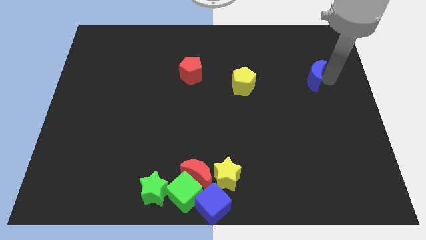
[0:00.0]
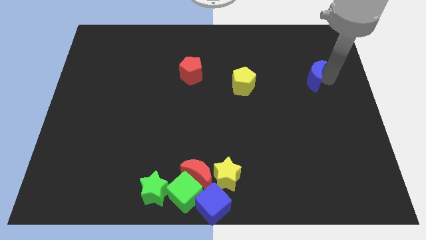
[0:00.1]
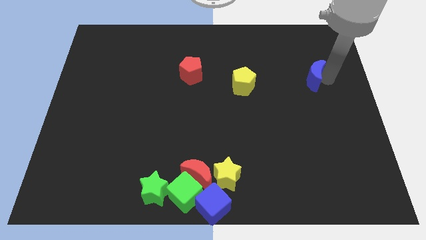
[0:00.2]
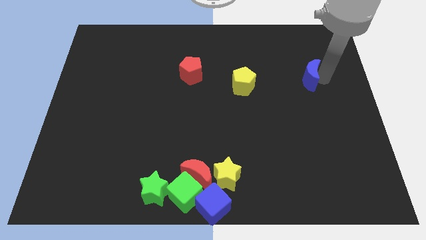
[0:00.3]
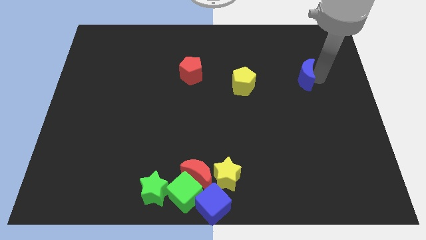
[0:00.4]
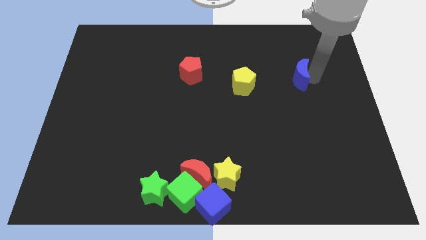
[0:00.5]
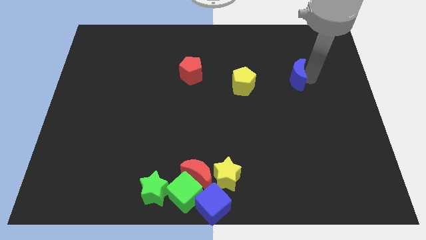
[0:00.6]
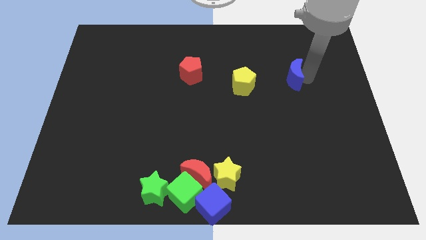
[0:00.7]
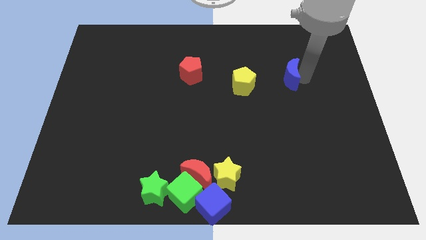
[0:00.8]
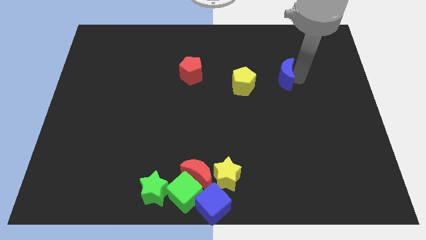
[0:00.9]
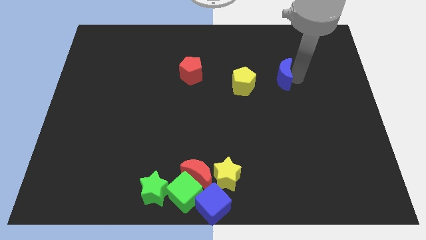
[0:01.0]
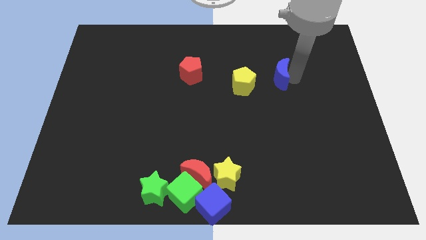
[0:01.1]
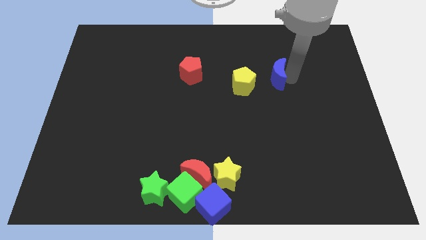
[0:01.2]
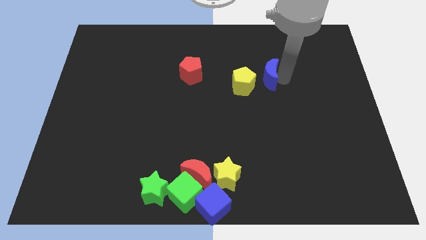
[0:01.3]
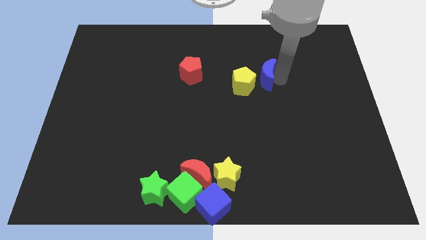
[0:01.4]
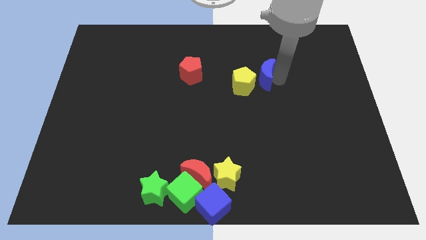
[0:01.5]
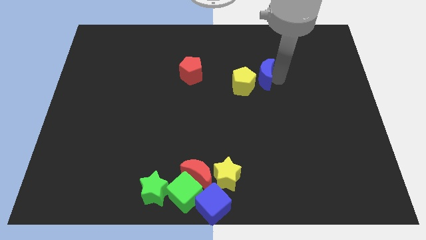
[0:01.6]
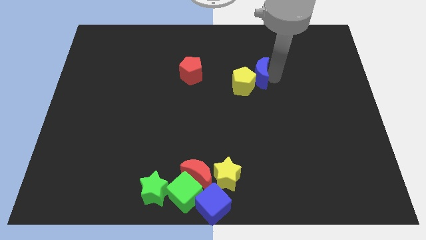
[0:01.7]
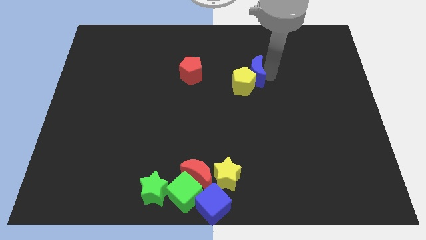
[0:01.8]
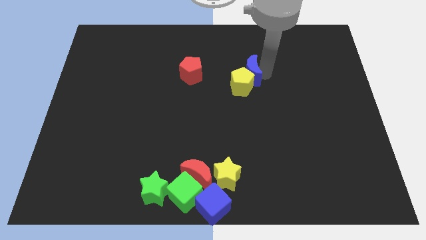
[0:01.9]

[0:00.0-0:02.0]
move the blue crescent close to the yellow pentagon

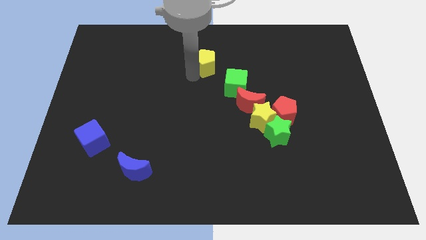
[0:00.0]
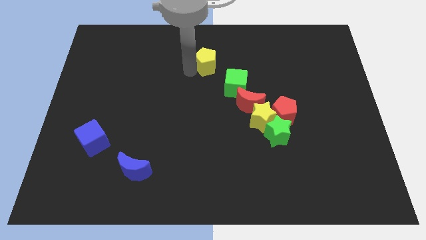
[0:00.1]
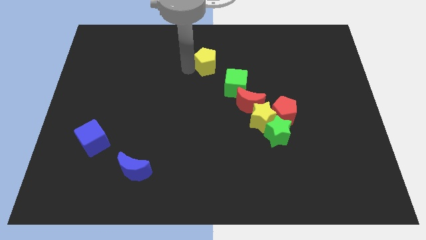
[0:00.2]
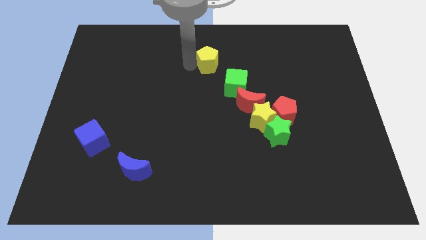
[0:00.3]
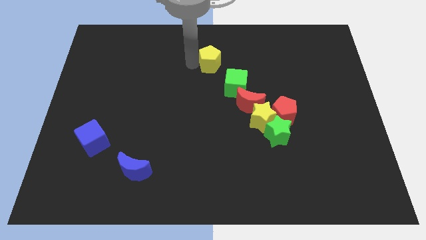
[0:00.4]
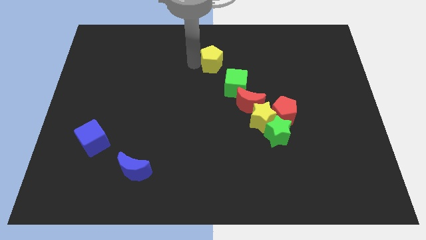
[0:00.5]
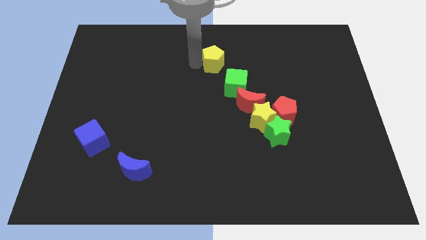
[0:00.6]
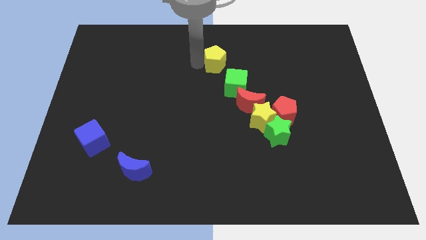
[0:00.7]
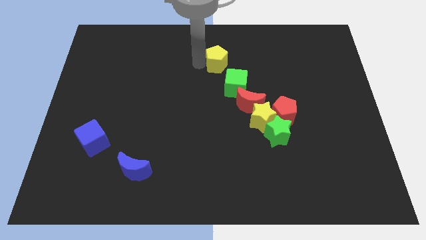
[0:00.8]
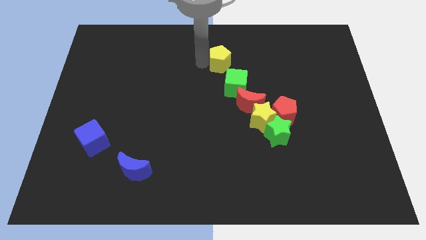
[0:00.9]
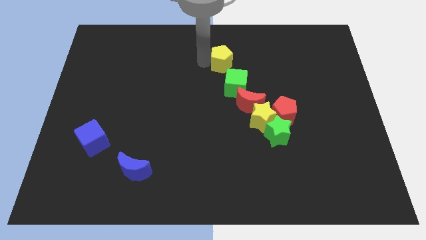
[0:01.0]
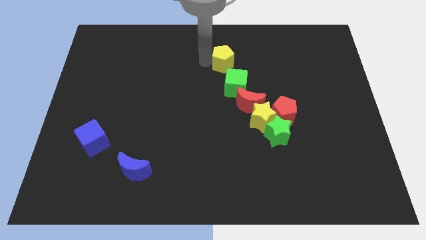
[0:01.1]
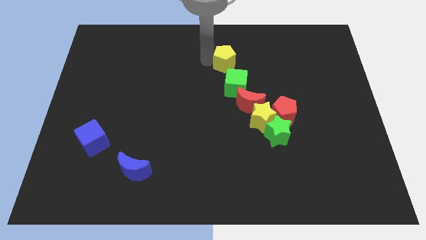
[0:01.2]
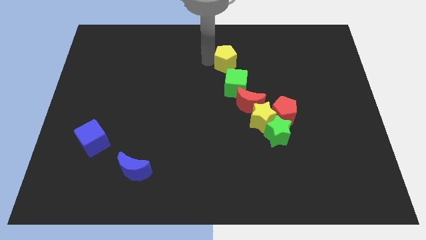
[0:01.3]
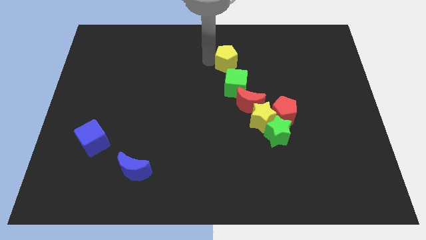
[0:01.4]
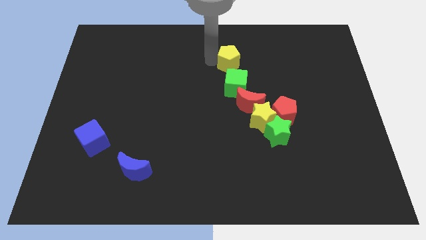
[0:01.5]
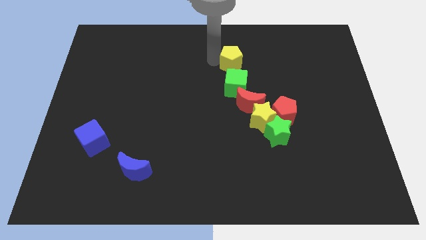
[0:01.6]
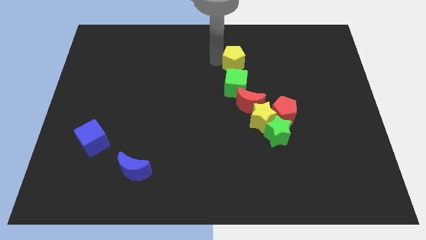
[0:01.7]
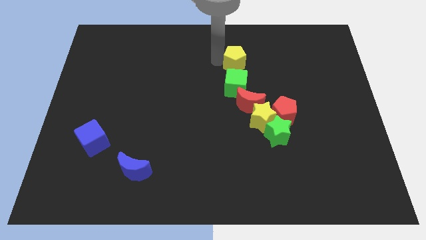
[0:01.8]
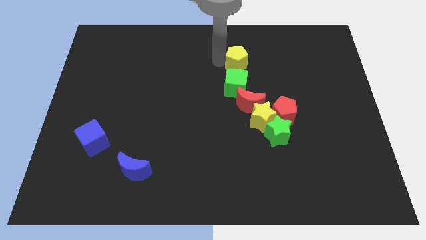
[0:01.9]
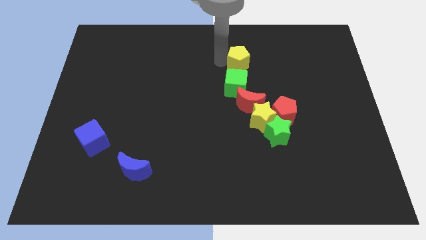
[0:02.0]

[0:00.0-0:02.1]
place the yellow pentagon to the top of the green cube

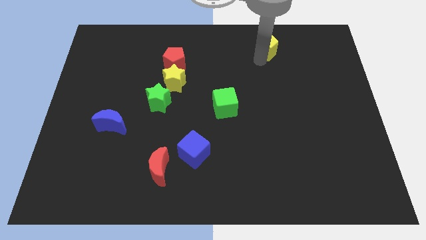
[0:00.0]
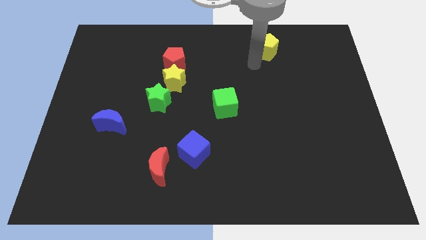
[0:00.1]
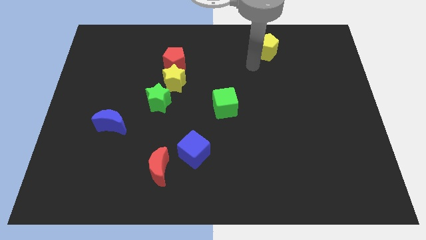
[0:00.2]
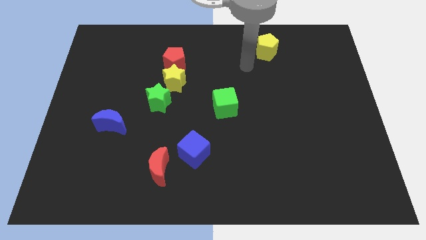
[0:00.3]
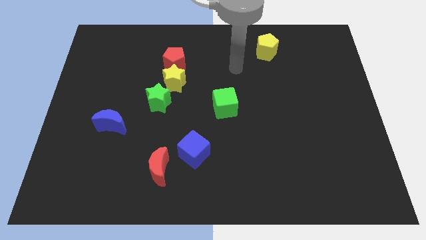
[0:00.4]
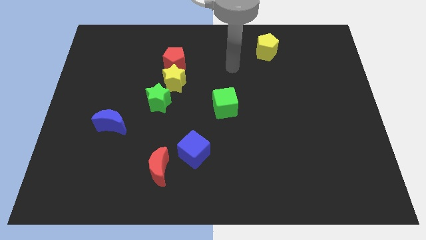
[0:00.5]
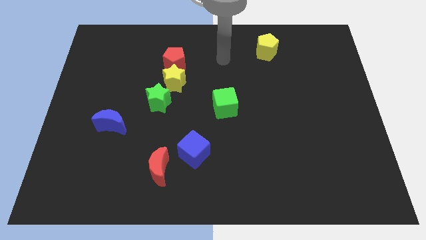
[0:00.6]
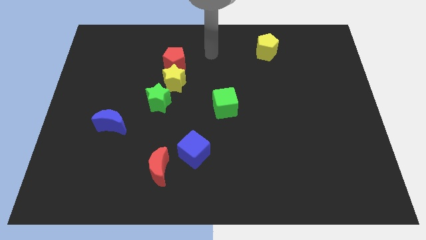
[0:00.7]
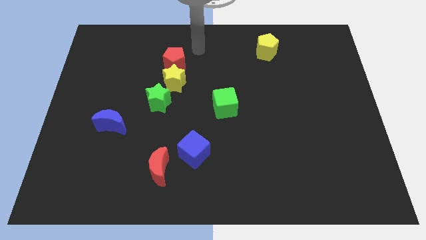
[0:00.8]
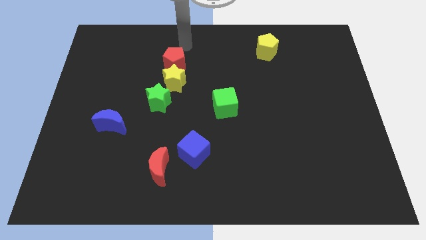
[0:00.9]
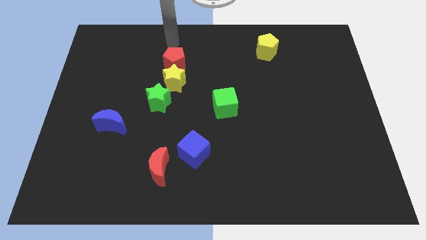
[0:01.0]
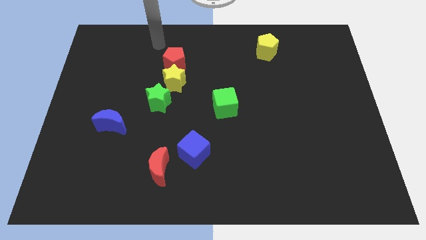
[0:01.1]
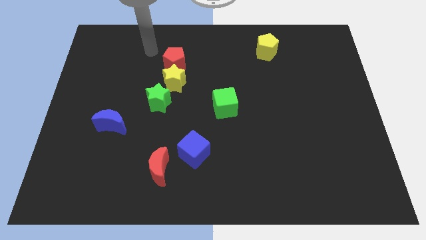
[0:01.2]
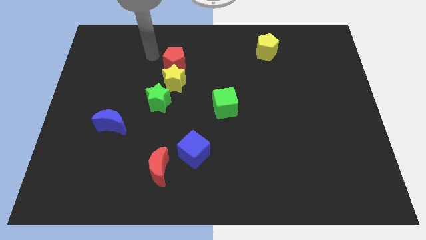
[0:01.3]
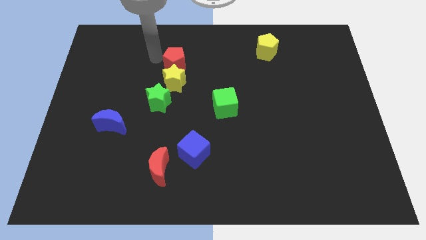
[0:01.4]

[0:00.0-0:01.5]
move the arm away from the yellow pentagon

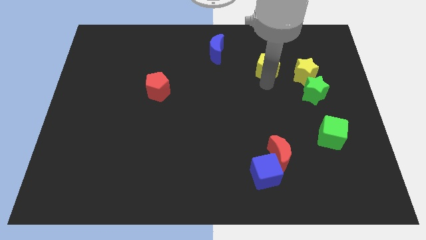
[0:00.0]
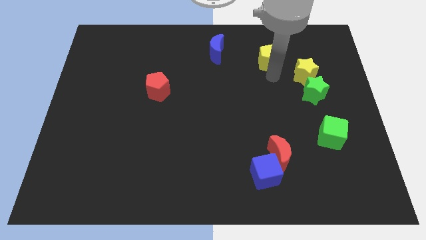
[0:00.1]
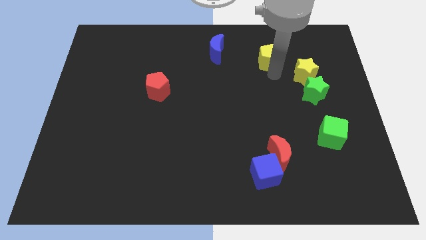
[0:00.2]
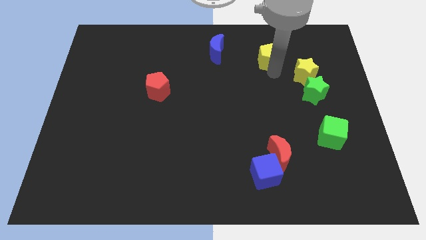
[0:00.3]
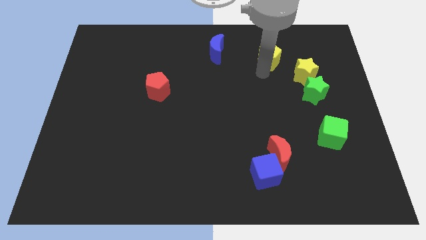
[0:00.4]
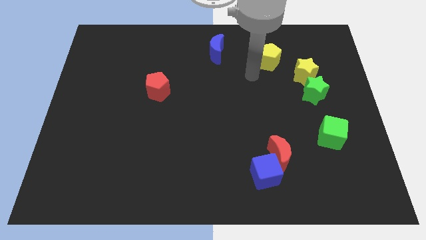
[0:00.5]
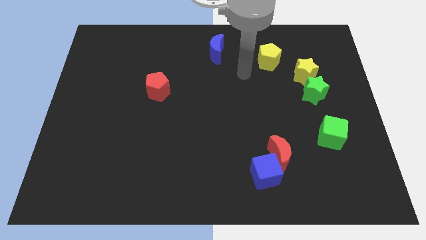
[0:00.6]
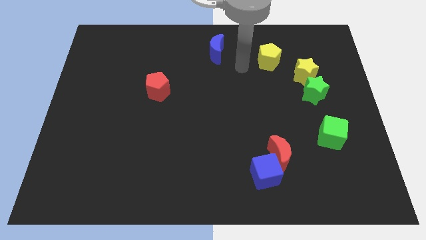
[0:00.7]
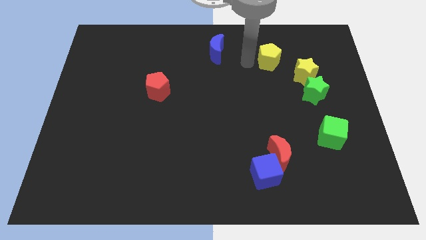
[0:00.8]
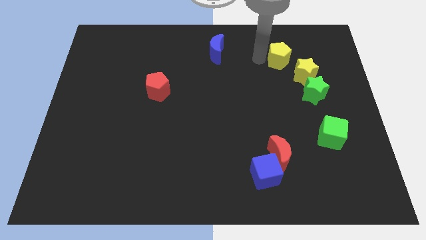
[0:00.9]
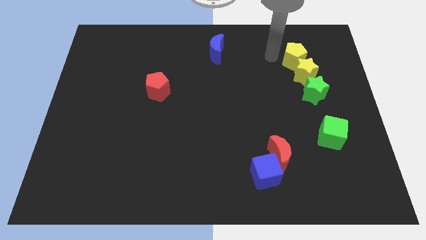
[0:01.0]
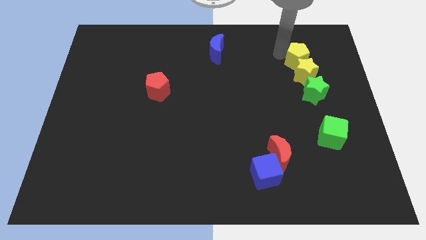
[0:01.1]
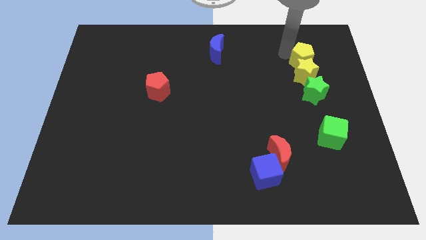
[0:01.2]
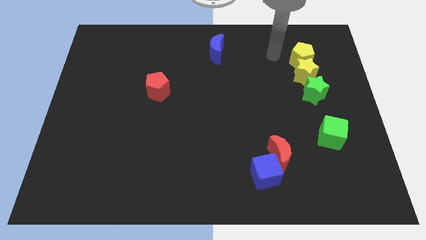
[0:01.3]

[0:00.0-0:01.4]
place yellow pentagon above yellow star

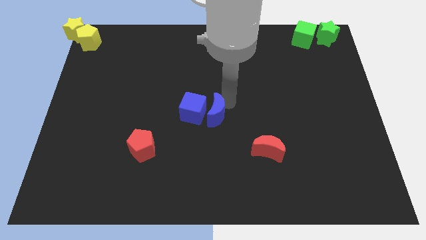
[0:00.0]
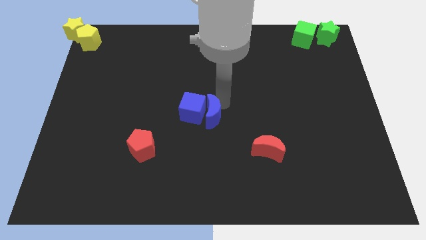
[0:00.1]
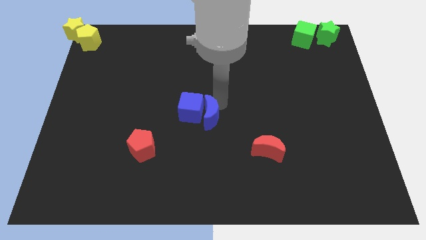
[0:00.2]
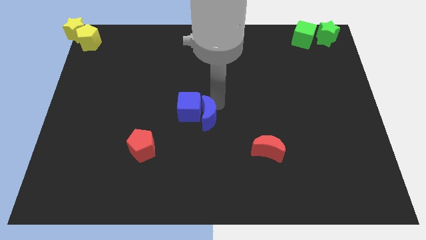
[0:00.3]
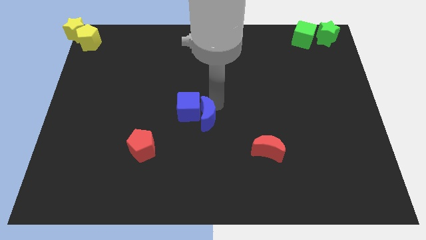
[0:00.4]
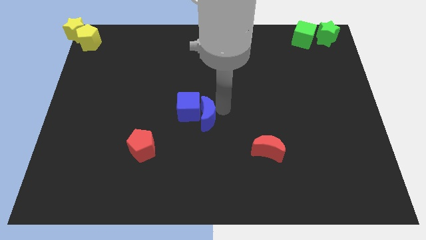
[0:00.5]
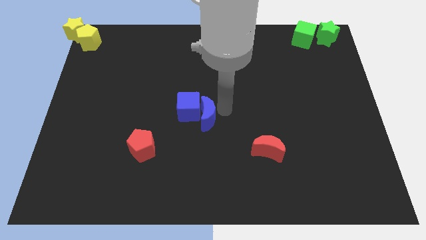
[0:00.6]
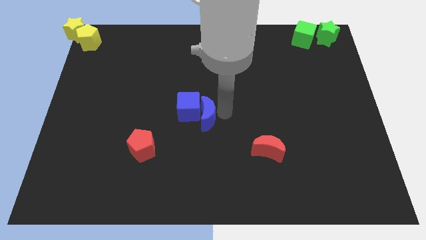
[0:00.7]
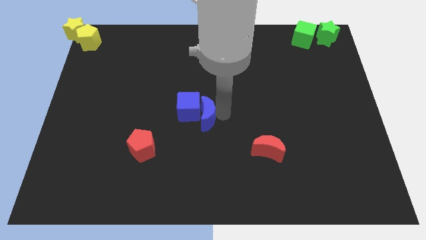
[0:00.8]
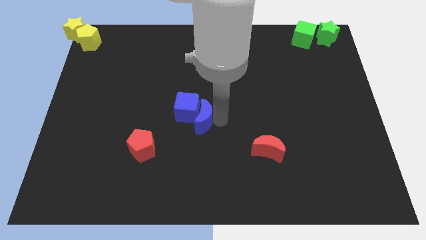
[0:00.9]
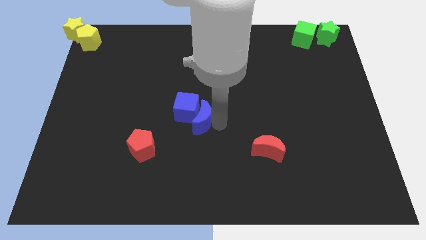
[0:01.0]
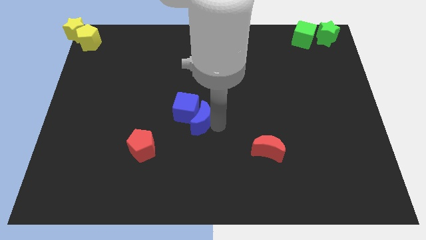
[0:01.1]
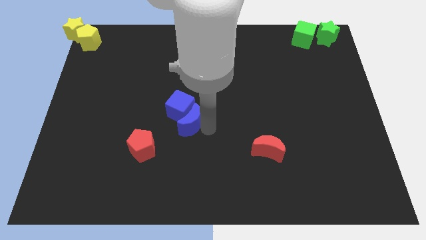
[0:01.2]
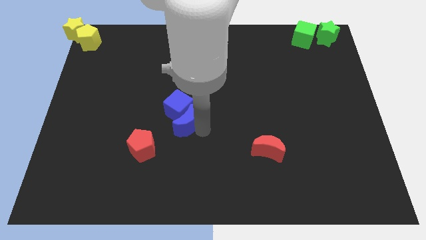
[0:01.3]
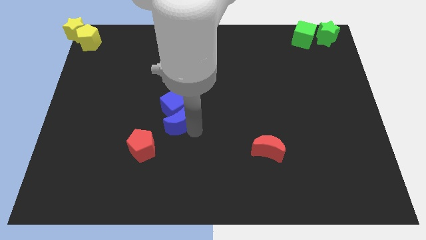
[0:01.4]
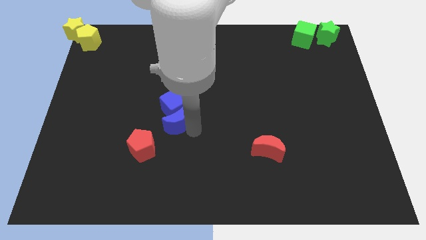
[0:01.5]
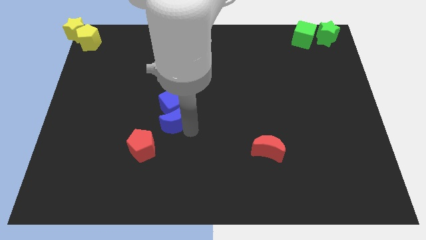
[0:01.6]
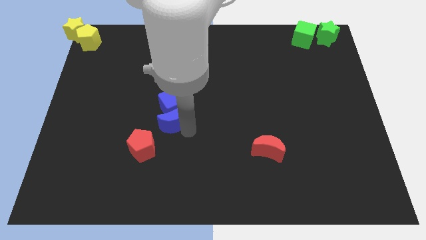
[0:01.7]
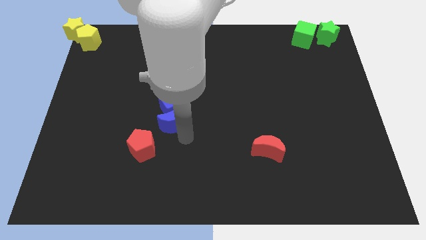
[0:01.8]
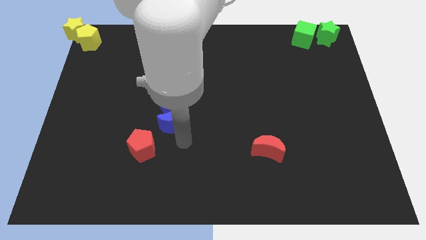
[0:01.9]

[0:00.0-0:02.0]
push the blue crescent into blue cube
